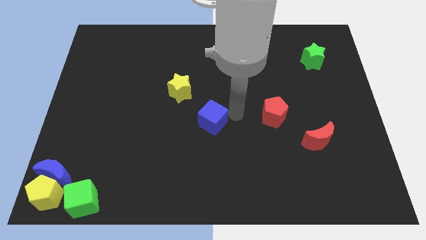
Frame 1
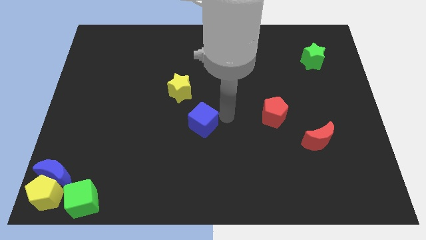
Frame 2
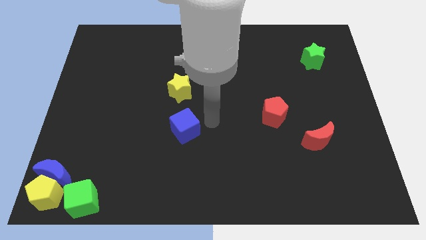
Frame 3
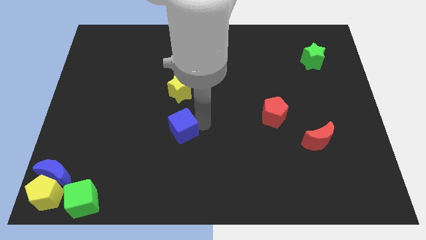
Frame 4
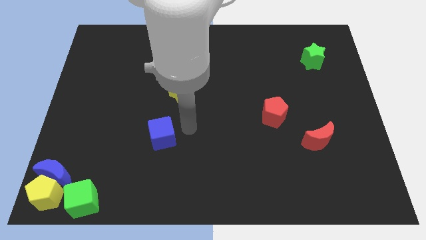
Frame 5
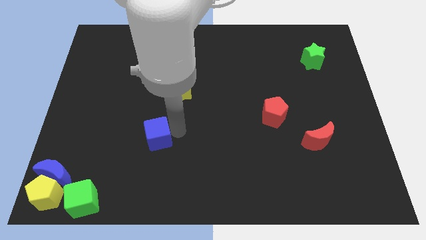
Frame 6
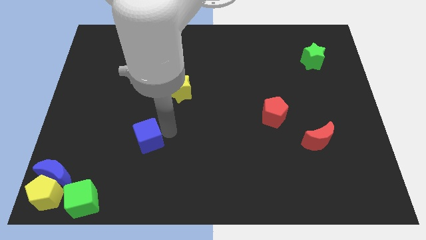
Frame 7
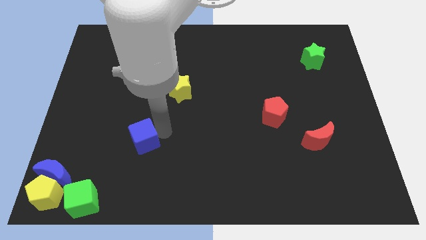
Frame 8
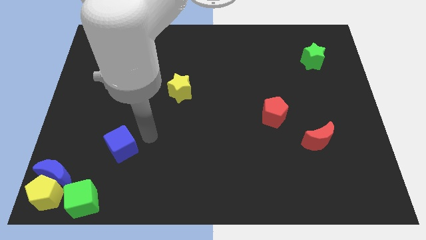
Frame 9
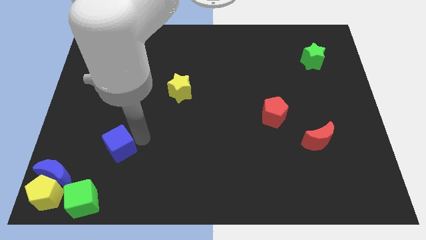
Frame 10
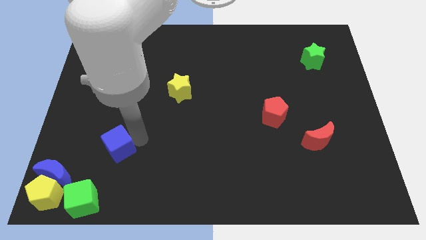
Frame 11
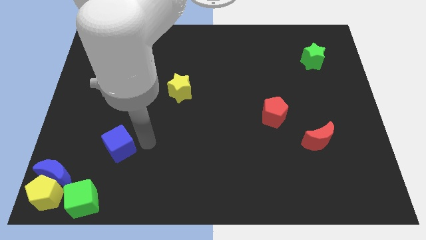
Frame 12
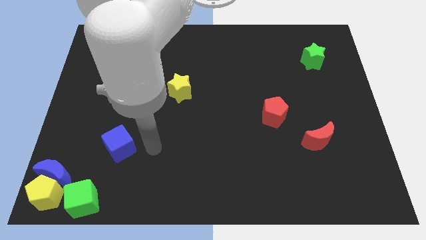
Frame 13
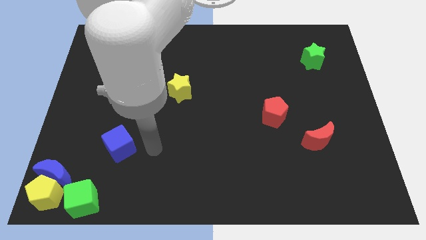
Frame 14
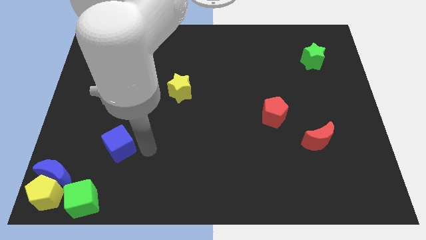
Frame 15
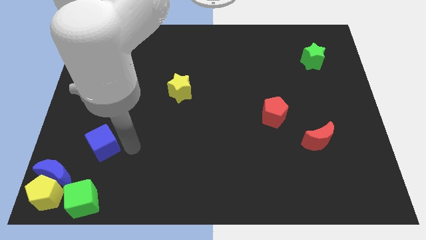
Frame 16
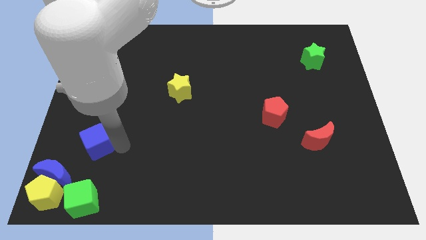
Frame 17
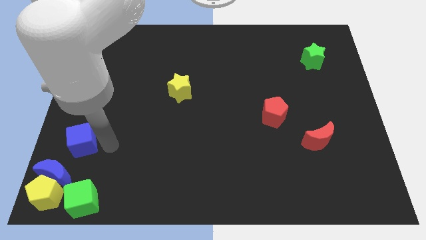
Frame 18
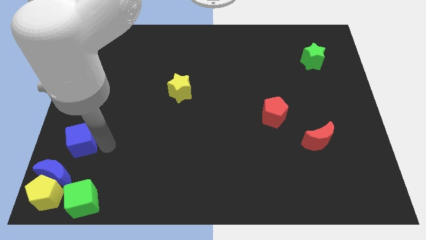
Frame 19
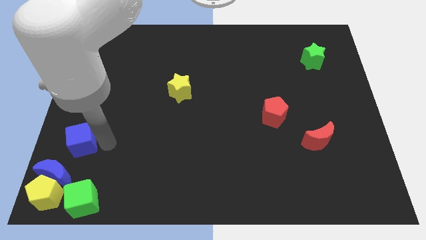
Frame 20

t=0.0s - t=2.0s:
place blue cube to the top of green cube

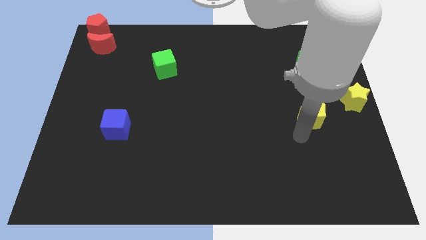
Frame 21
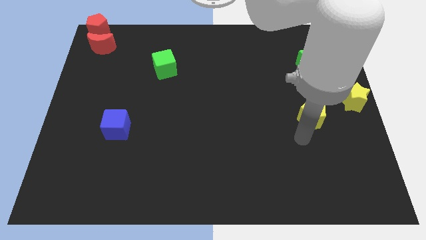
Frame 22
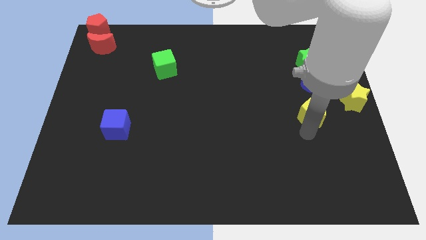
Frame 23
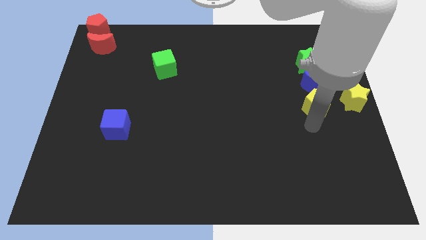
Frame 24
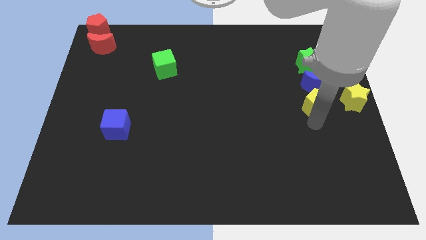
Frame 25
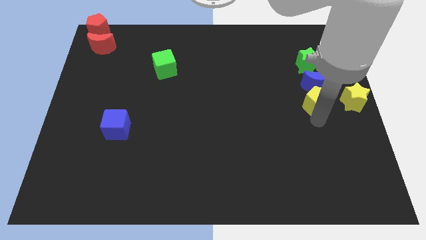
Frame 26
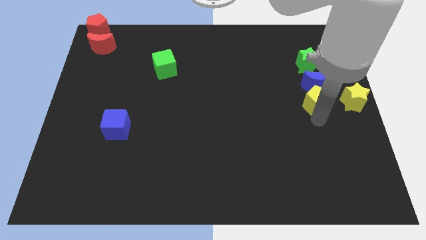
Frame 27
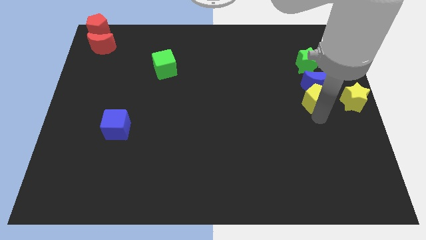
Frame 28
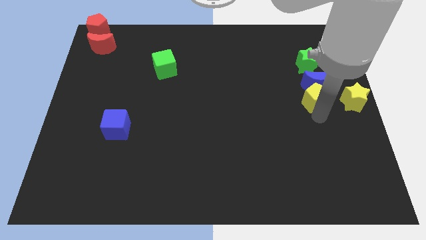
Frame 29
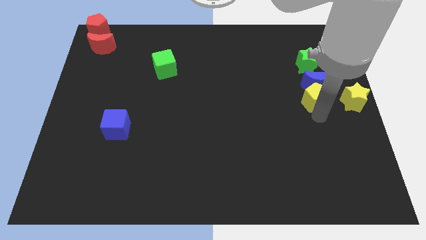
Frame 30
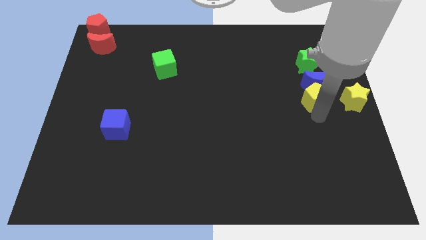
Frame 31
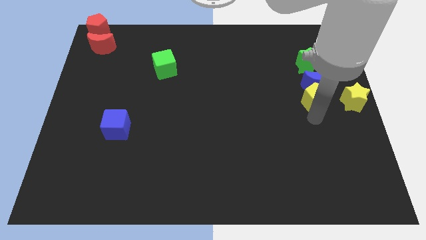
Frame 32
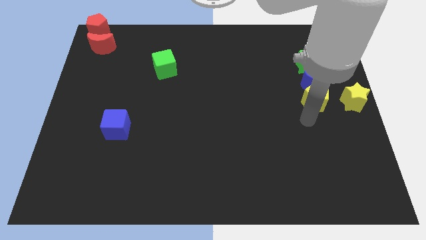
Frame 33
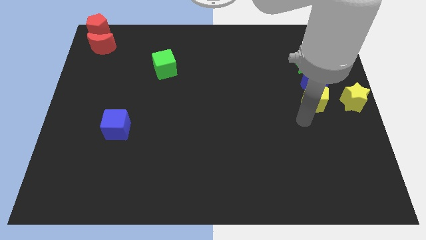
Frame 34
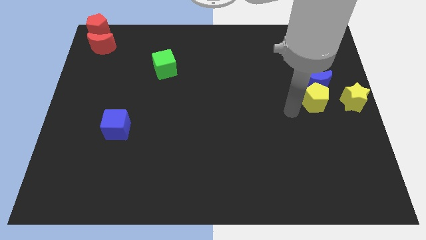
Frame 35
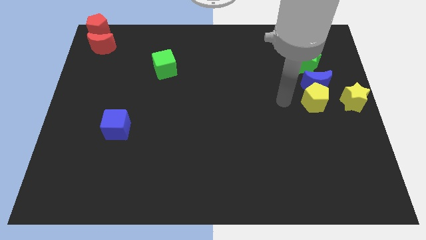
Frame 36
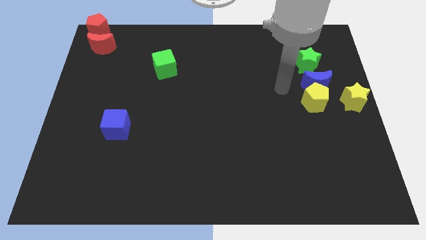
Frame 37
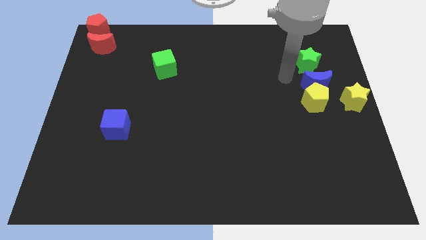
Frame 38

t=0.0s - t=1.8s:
put the yellow pentagon below the blue moon

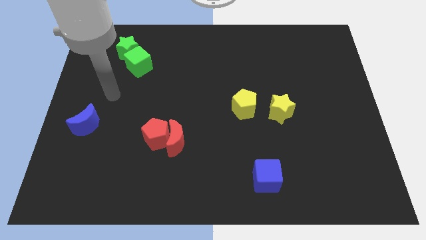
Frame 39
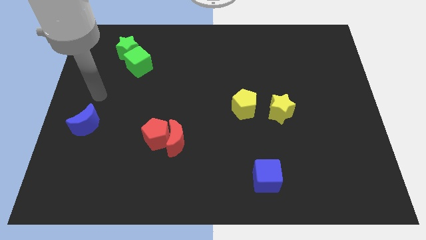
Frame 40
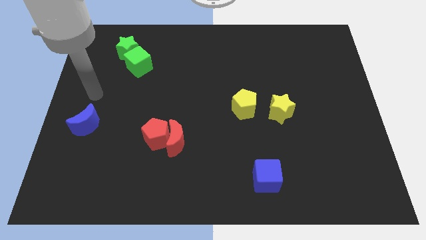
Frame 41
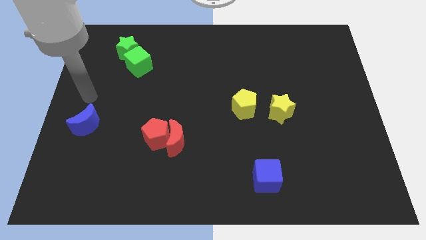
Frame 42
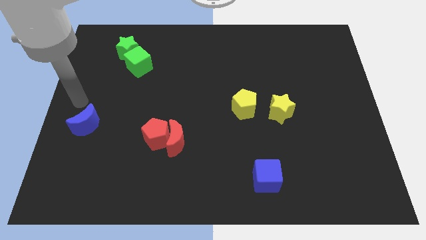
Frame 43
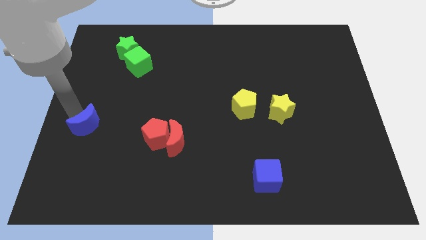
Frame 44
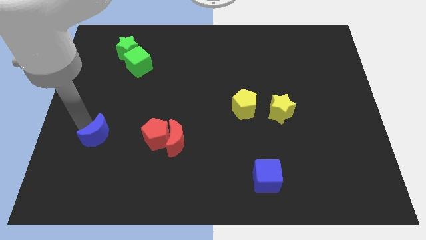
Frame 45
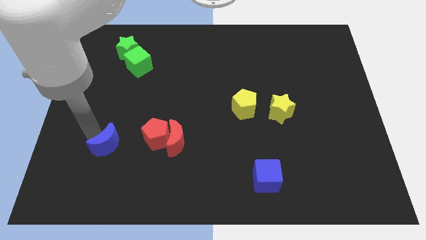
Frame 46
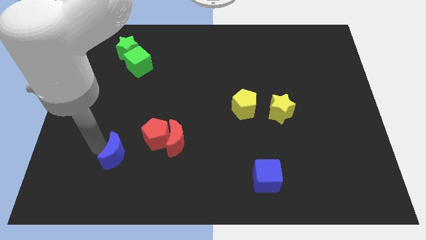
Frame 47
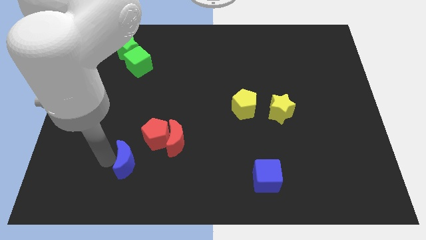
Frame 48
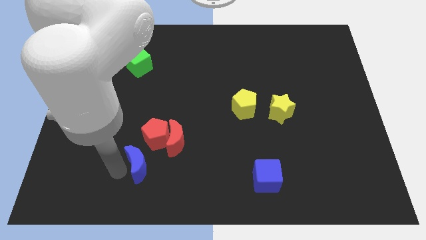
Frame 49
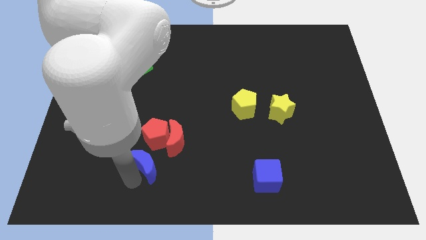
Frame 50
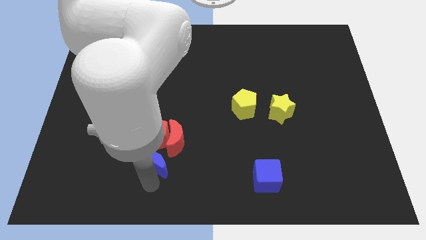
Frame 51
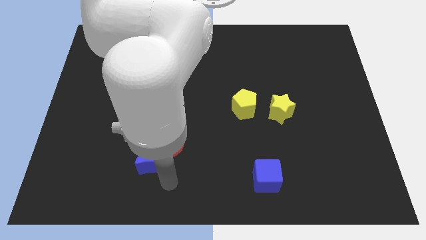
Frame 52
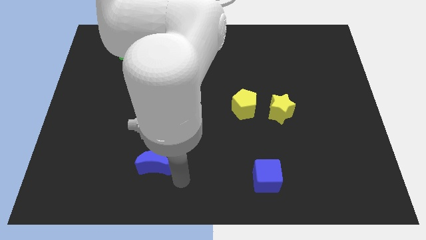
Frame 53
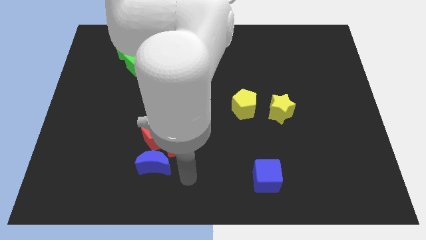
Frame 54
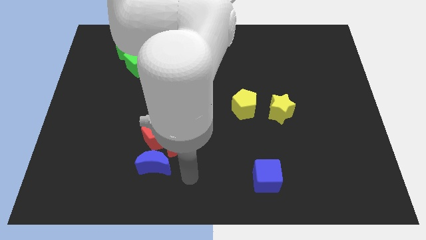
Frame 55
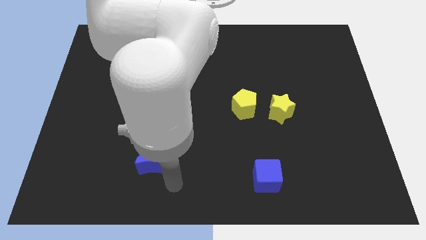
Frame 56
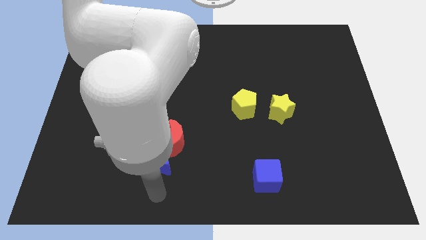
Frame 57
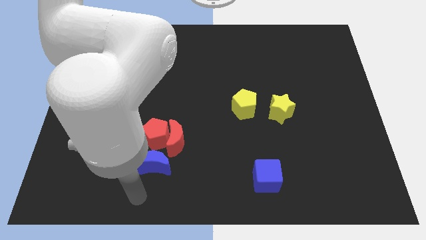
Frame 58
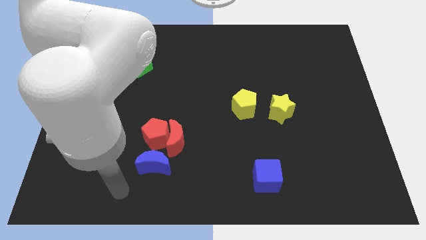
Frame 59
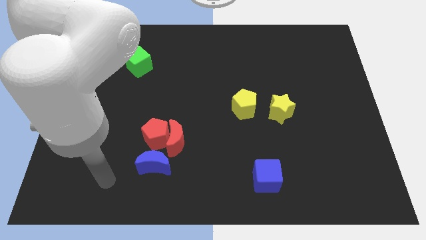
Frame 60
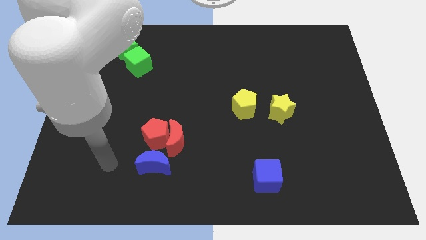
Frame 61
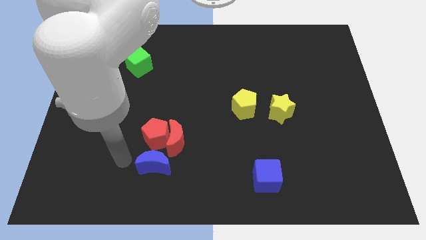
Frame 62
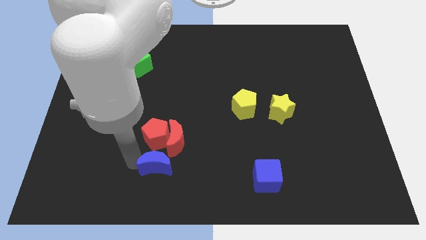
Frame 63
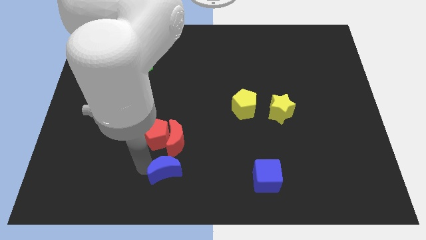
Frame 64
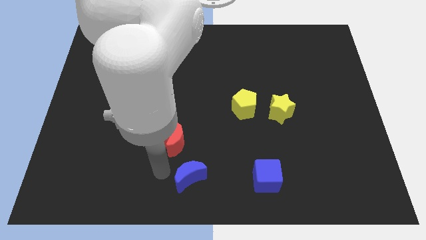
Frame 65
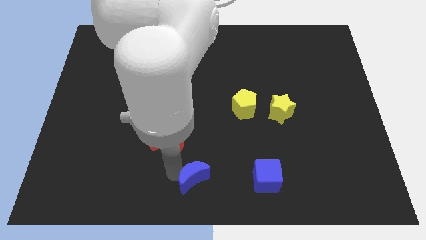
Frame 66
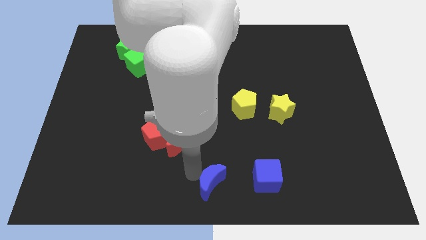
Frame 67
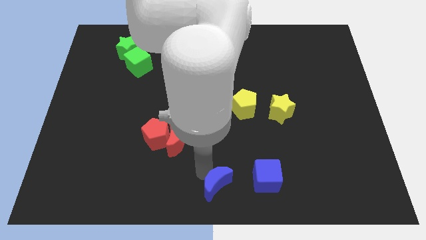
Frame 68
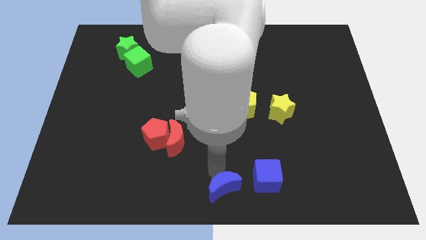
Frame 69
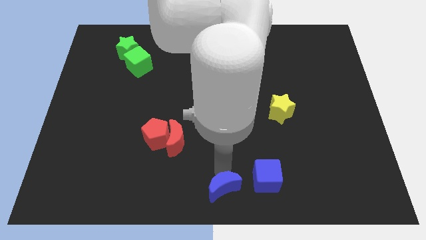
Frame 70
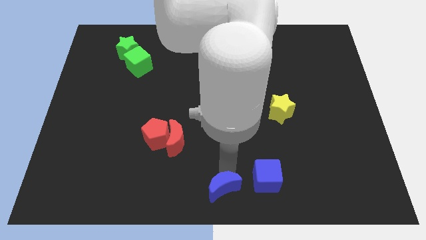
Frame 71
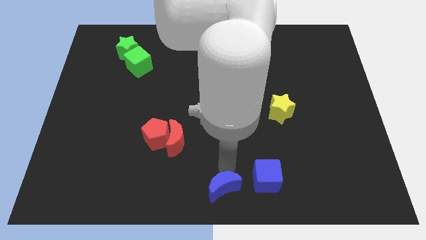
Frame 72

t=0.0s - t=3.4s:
move the blue crescent to the left of the blue cube

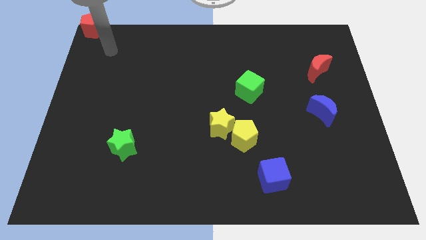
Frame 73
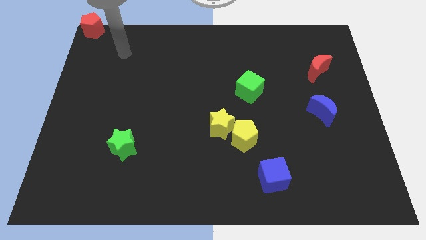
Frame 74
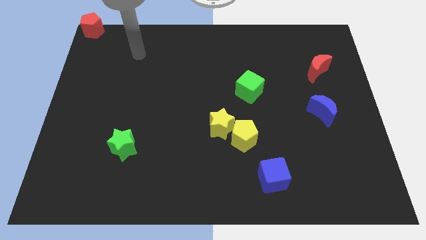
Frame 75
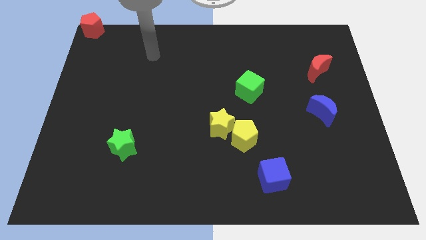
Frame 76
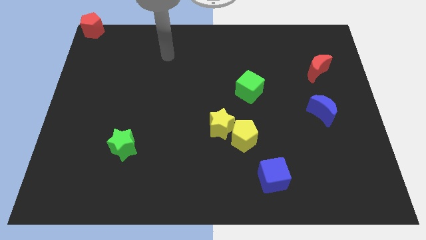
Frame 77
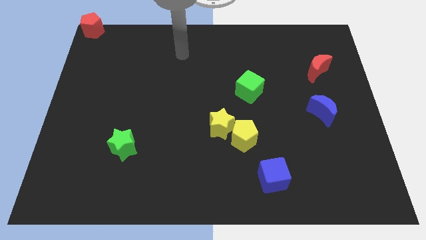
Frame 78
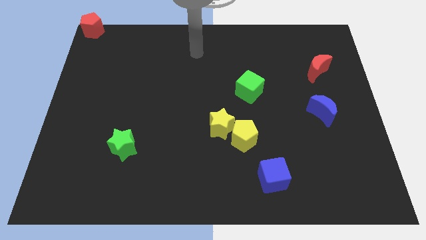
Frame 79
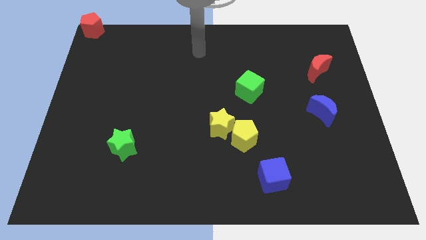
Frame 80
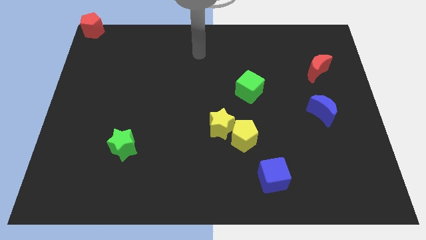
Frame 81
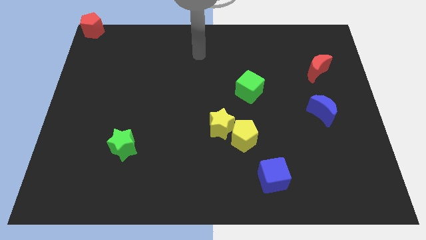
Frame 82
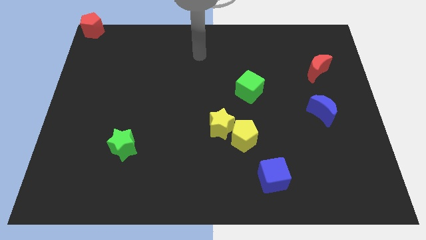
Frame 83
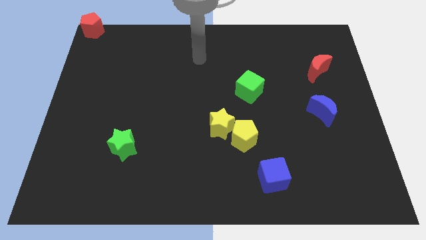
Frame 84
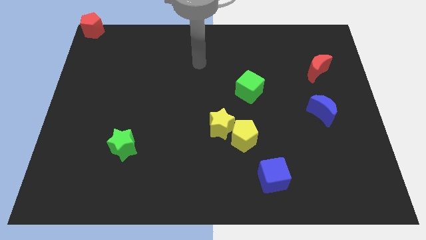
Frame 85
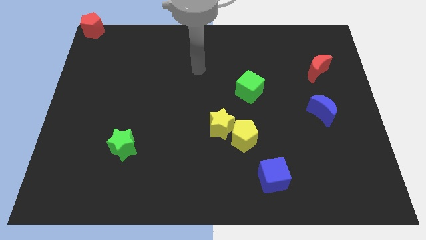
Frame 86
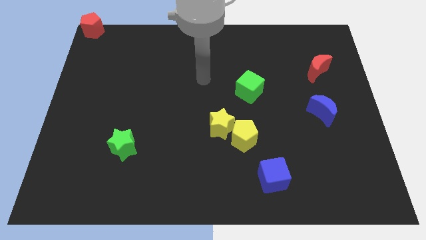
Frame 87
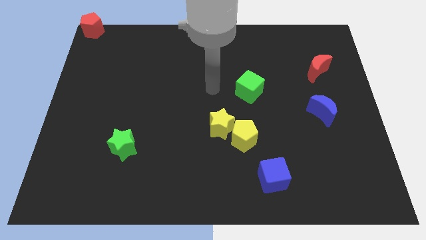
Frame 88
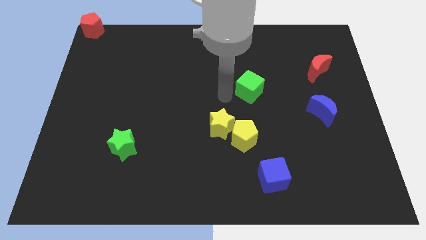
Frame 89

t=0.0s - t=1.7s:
move the arm towards the green cube

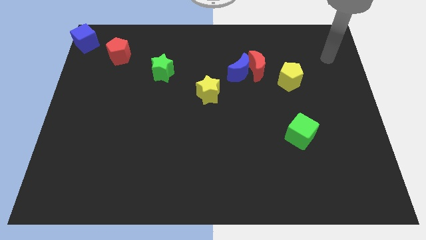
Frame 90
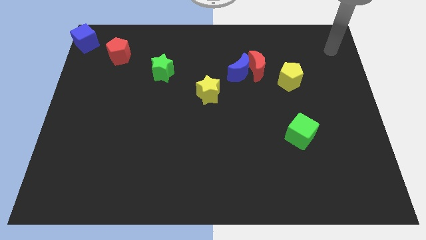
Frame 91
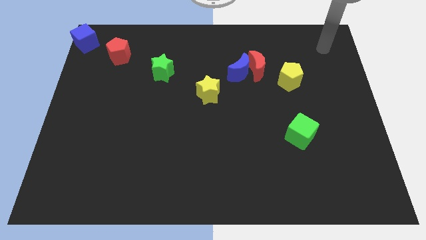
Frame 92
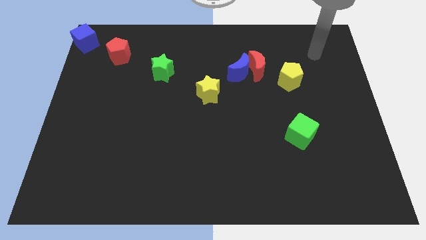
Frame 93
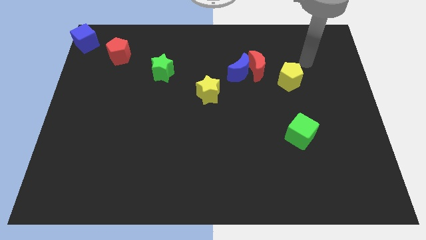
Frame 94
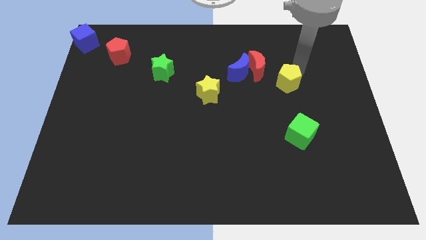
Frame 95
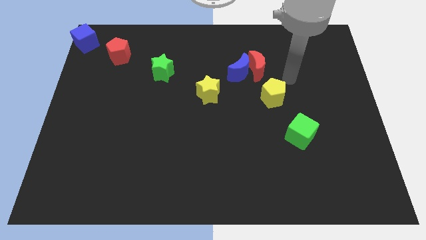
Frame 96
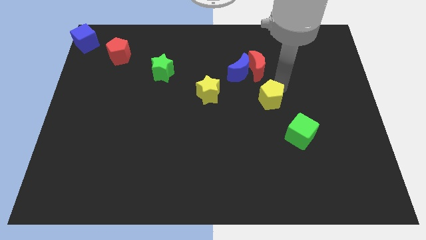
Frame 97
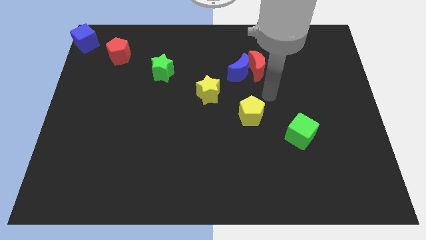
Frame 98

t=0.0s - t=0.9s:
move the yellow pentagon in between the yellow star and green cube
